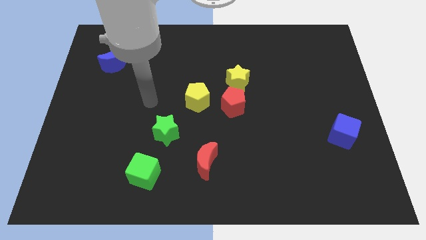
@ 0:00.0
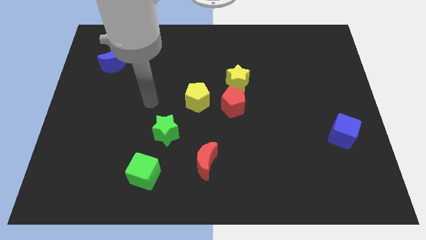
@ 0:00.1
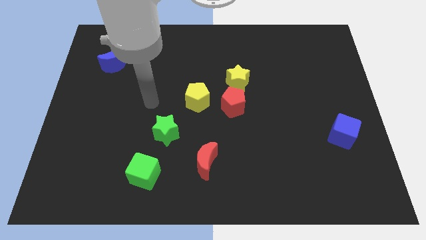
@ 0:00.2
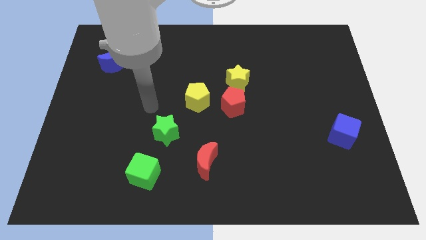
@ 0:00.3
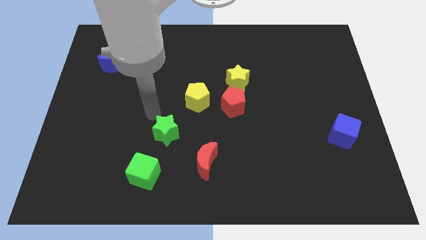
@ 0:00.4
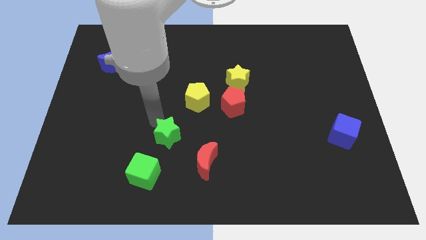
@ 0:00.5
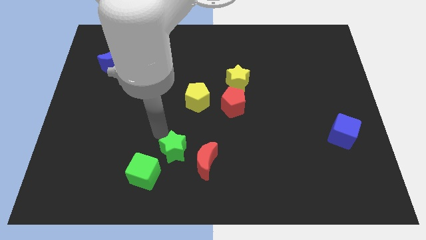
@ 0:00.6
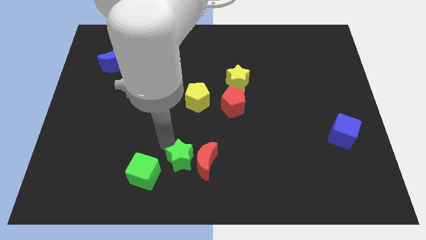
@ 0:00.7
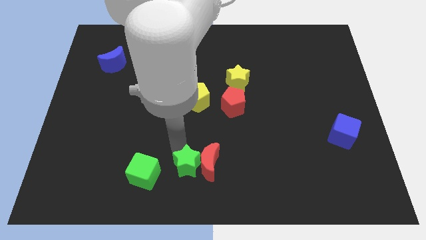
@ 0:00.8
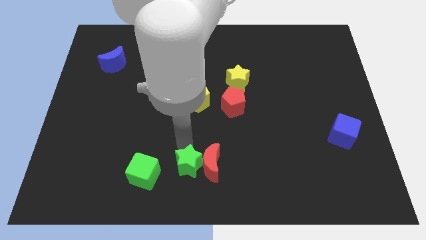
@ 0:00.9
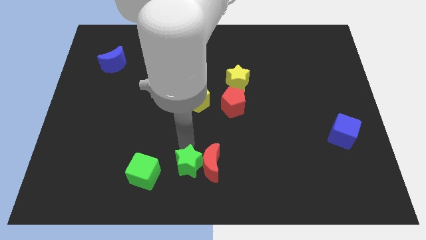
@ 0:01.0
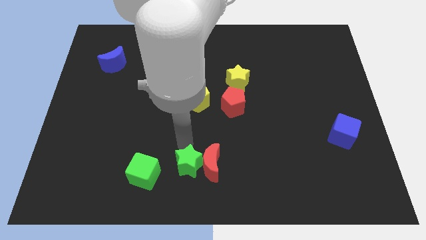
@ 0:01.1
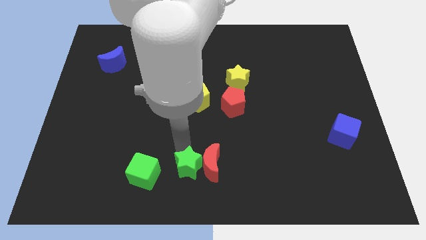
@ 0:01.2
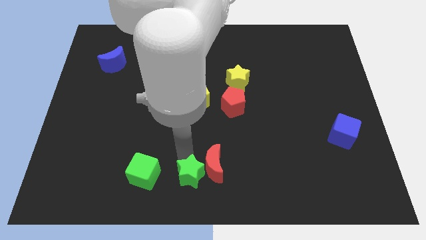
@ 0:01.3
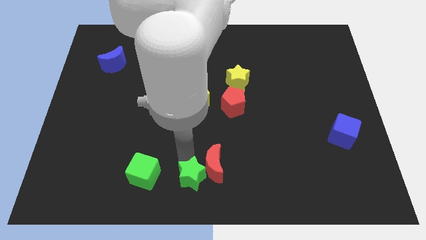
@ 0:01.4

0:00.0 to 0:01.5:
push the green star to the left side of the red moon

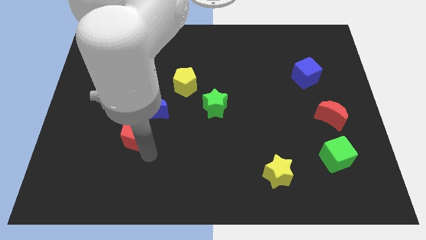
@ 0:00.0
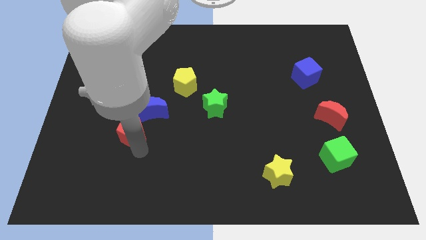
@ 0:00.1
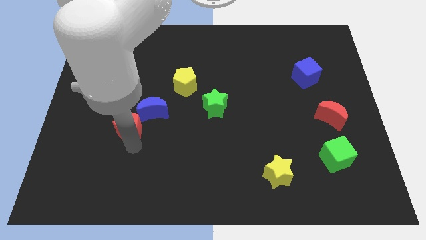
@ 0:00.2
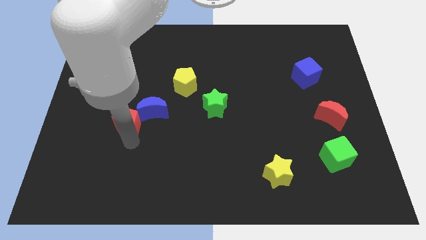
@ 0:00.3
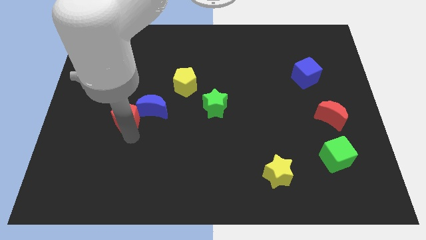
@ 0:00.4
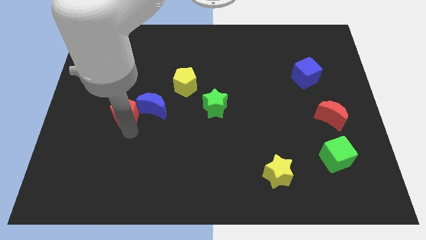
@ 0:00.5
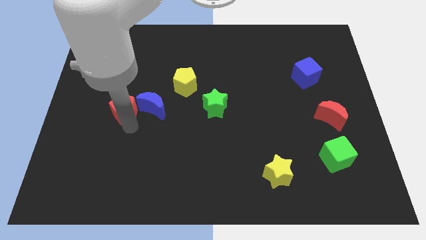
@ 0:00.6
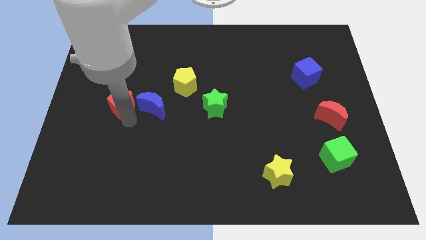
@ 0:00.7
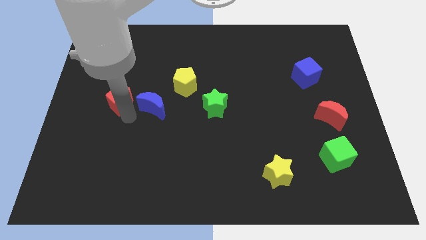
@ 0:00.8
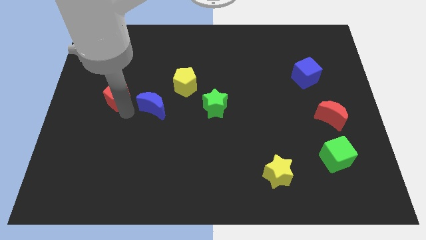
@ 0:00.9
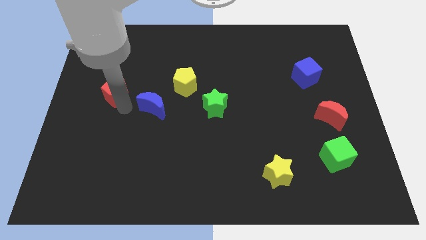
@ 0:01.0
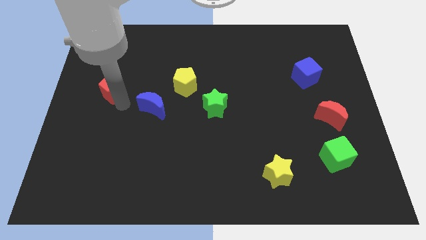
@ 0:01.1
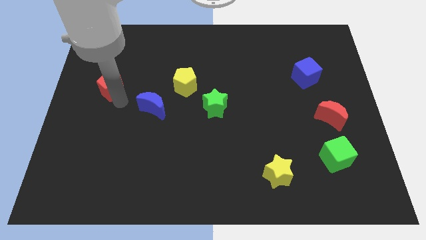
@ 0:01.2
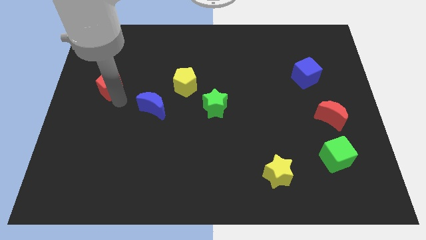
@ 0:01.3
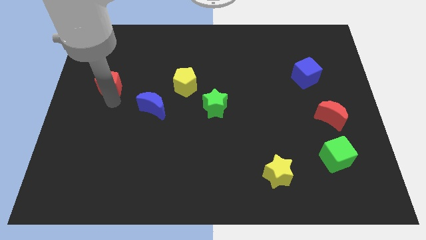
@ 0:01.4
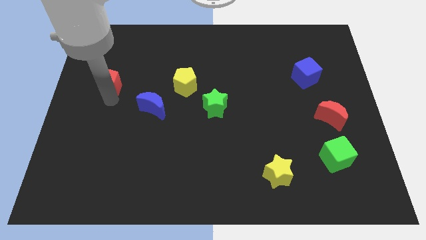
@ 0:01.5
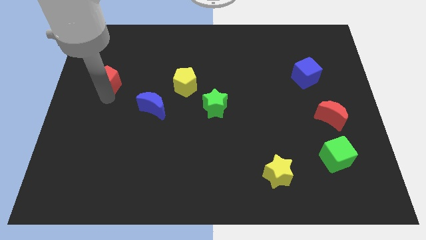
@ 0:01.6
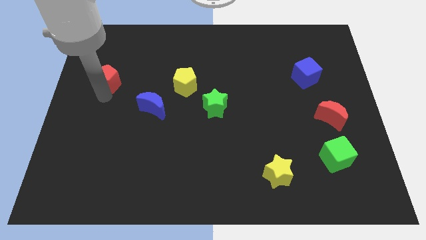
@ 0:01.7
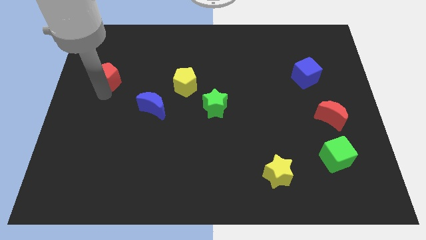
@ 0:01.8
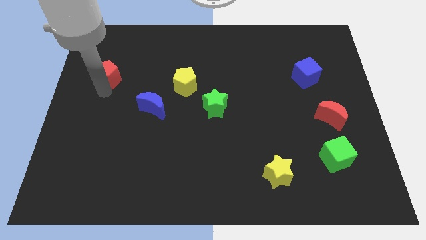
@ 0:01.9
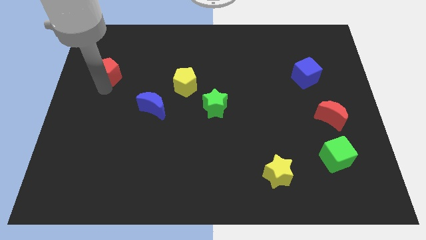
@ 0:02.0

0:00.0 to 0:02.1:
push the red pentagon diagonally upwards to the blue crescent

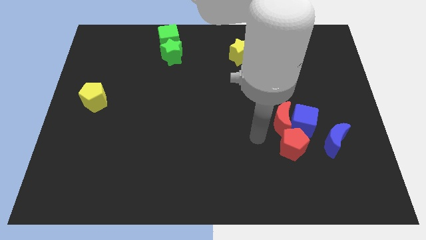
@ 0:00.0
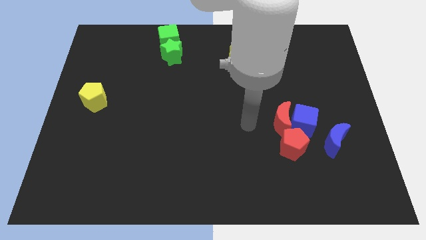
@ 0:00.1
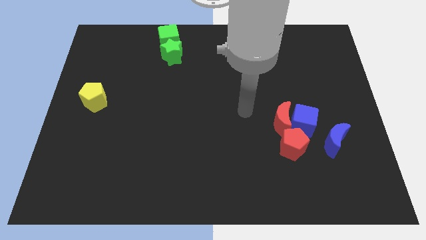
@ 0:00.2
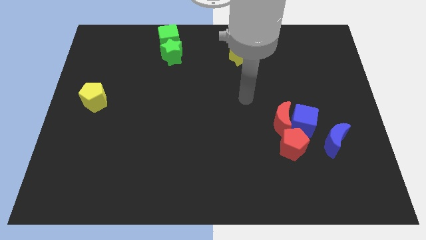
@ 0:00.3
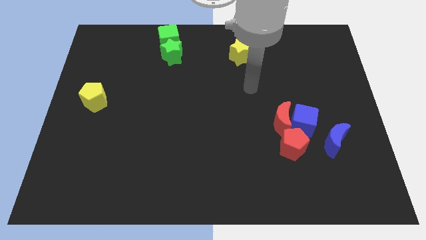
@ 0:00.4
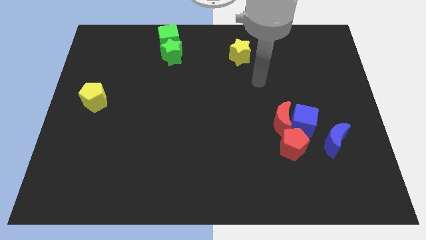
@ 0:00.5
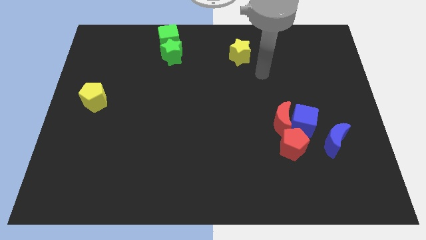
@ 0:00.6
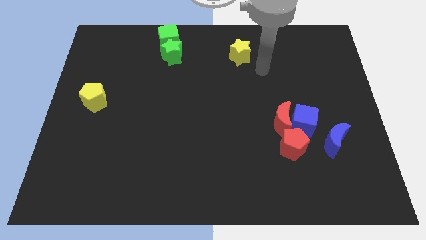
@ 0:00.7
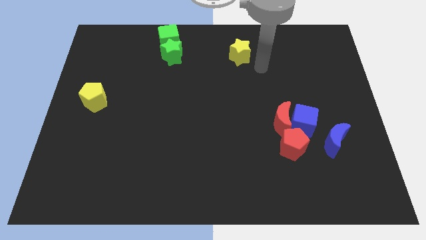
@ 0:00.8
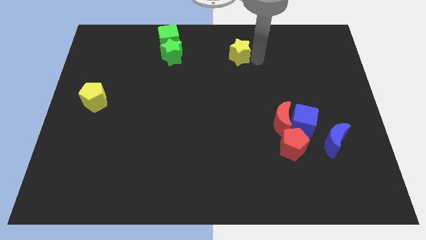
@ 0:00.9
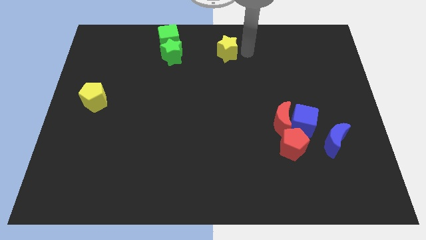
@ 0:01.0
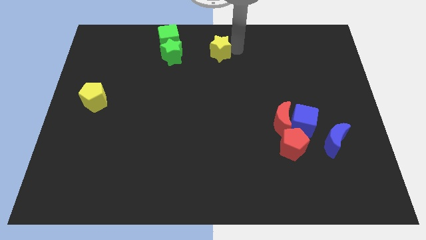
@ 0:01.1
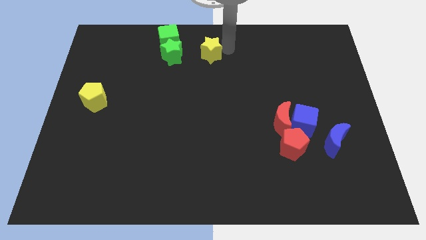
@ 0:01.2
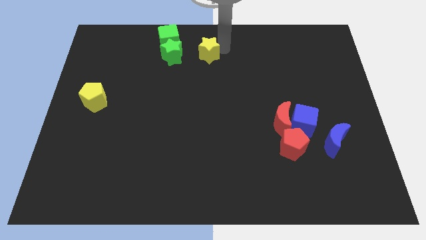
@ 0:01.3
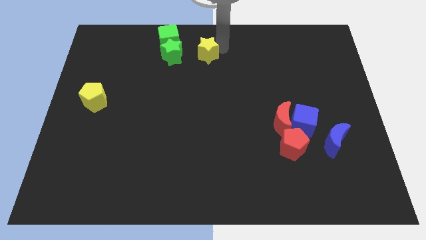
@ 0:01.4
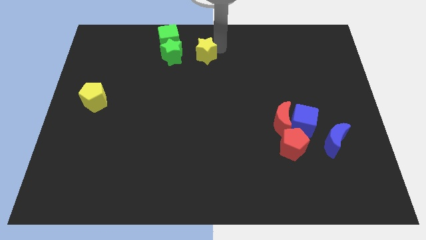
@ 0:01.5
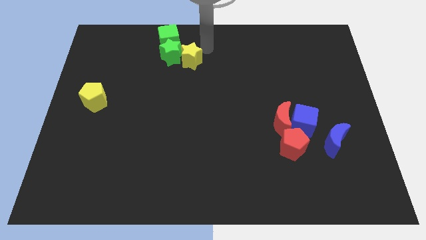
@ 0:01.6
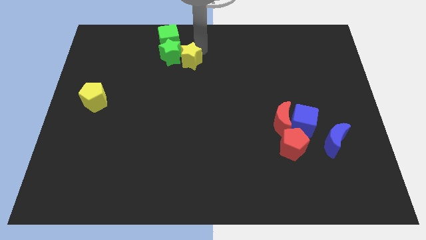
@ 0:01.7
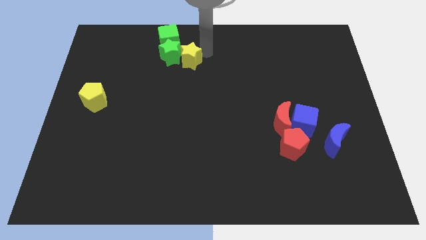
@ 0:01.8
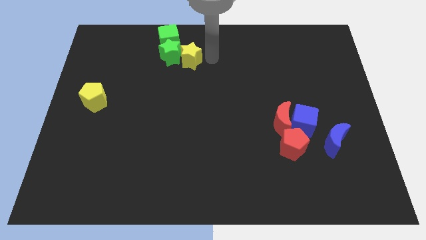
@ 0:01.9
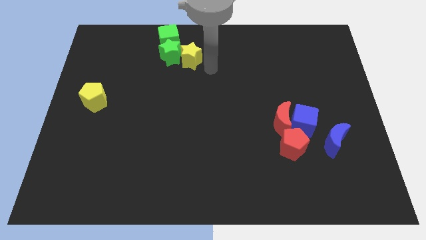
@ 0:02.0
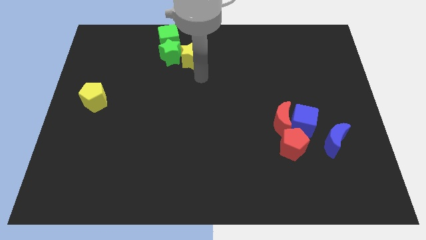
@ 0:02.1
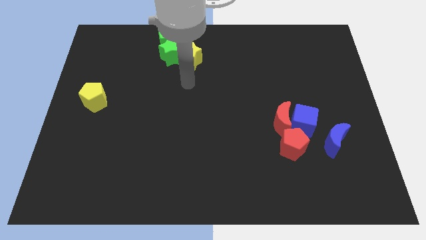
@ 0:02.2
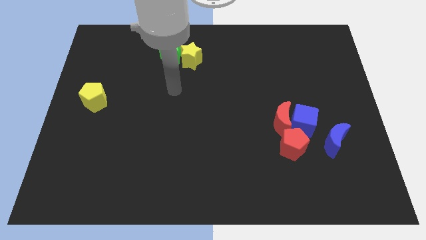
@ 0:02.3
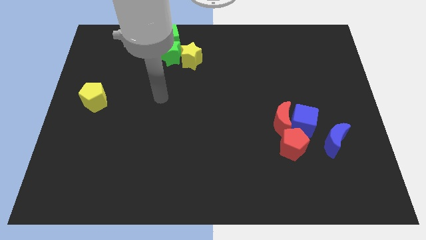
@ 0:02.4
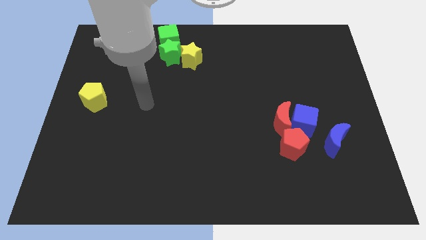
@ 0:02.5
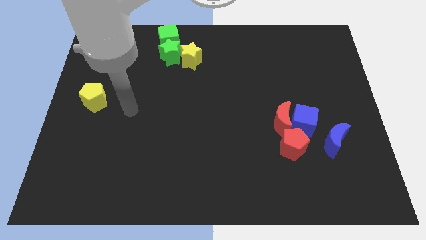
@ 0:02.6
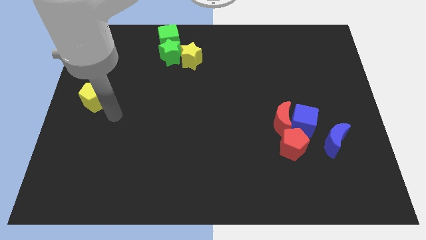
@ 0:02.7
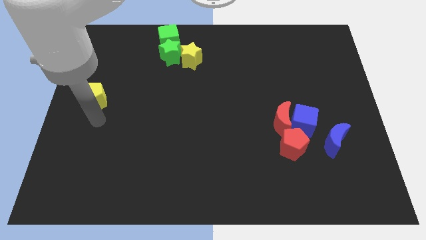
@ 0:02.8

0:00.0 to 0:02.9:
slide the yellow star below the right side of the green star

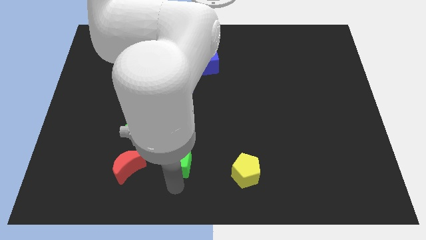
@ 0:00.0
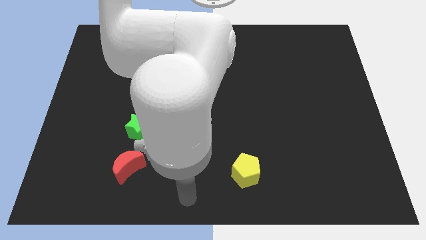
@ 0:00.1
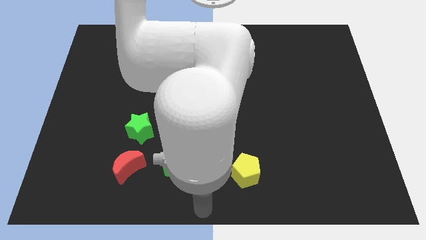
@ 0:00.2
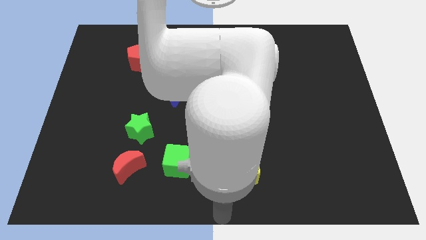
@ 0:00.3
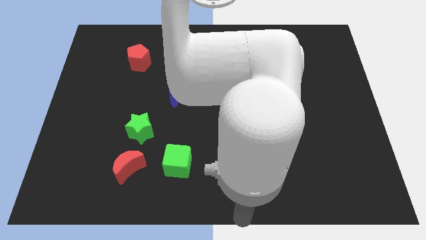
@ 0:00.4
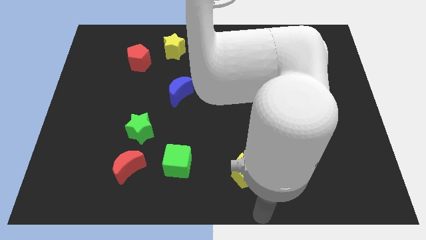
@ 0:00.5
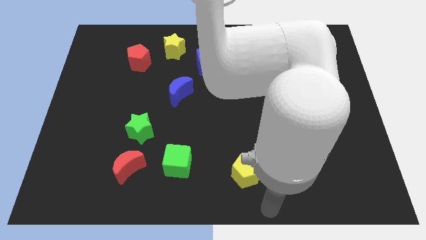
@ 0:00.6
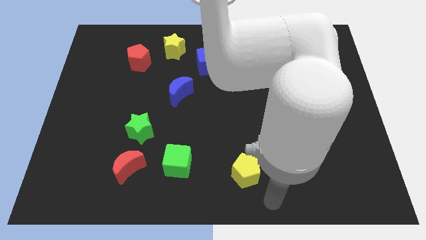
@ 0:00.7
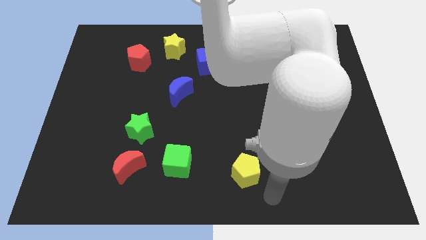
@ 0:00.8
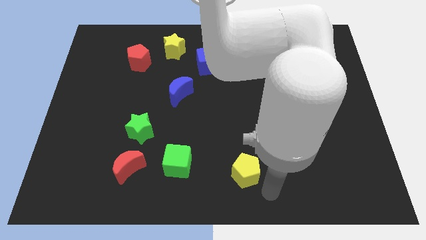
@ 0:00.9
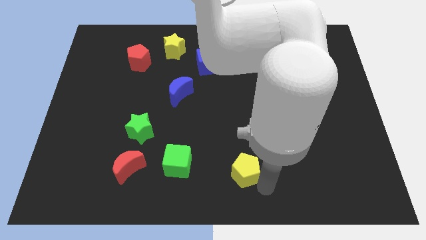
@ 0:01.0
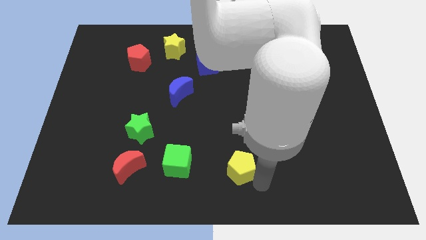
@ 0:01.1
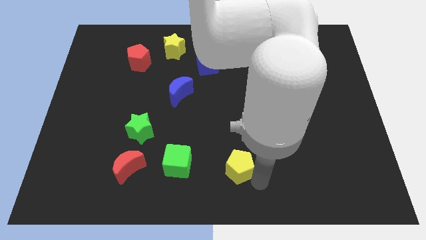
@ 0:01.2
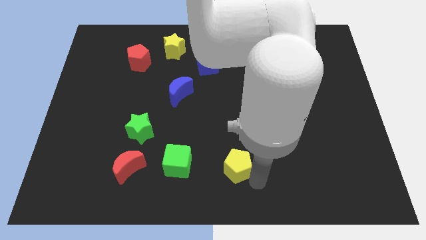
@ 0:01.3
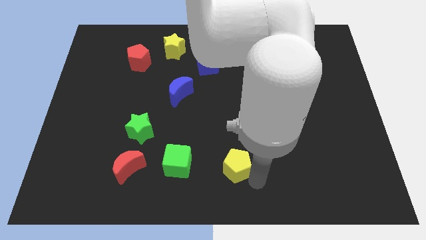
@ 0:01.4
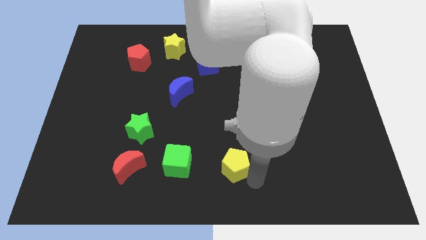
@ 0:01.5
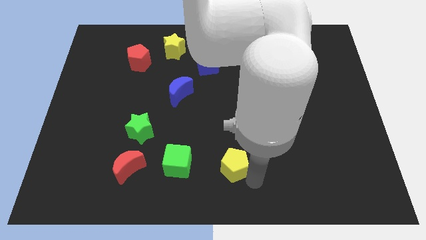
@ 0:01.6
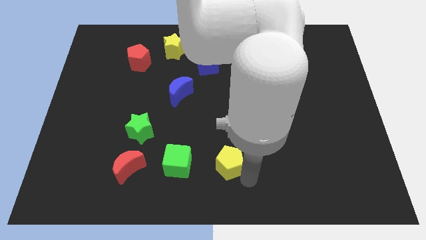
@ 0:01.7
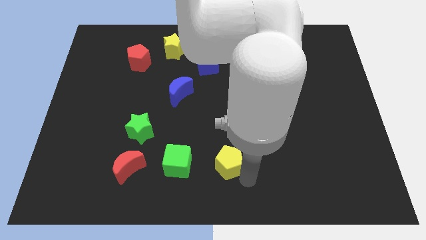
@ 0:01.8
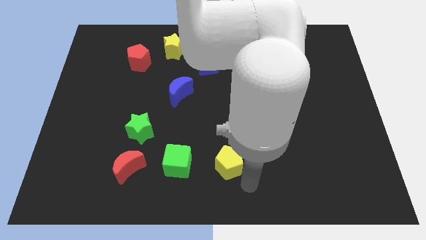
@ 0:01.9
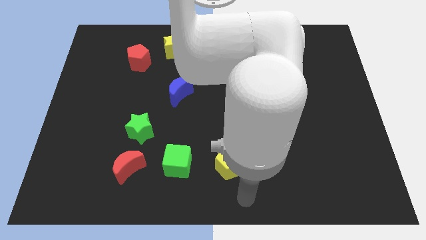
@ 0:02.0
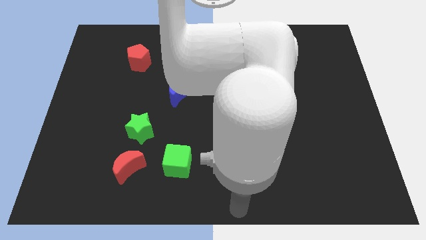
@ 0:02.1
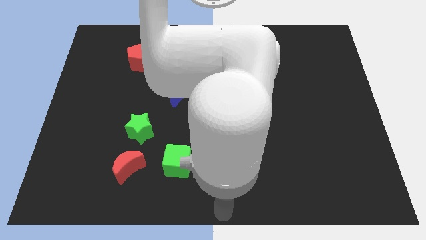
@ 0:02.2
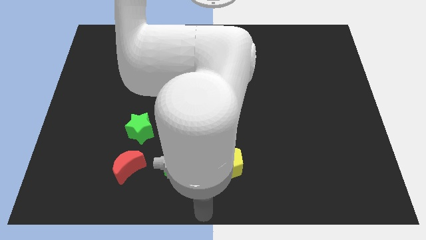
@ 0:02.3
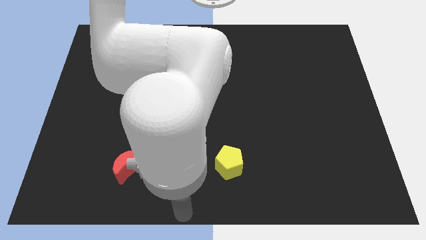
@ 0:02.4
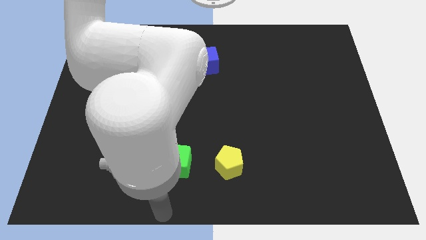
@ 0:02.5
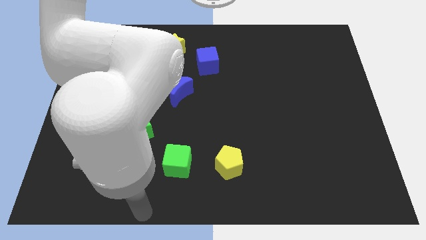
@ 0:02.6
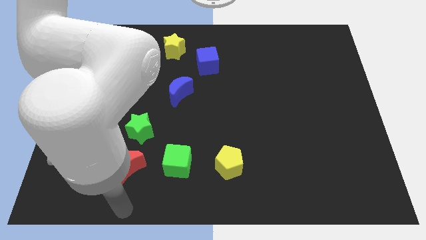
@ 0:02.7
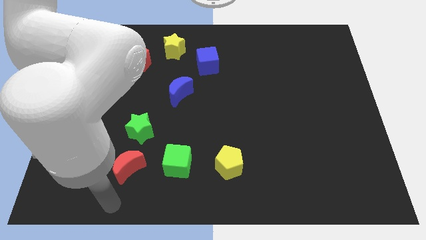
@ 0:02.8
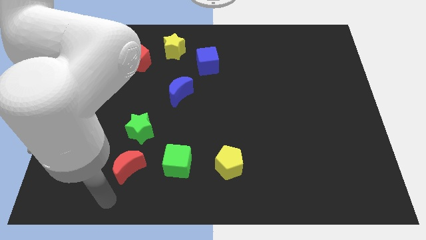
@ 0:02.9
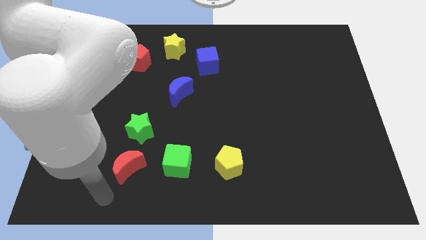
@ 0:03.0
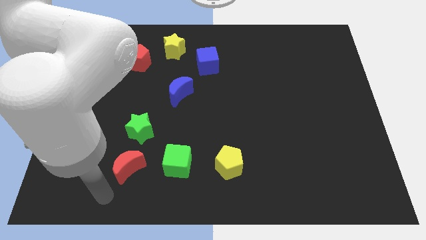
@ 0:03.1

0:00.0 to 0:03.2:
push the yellow pentagon slightly towards the green cube
